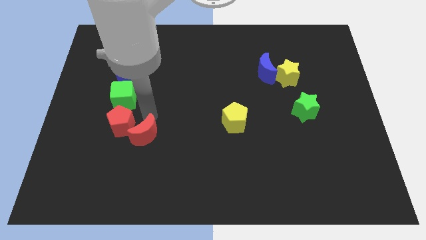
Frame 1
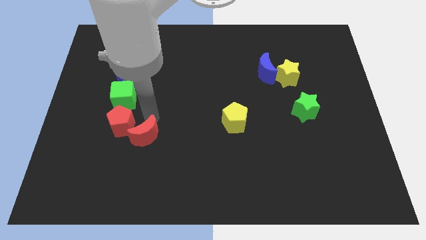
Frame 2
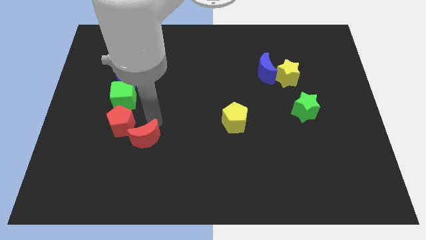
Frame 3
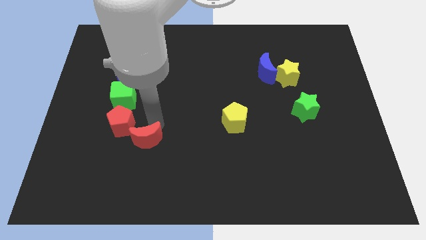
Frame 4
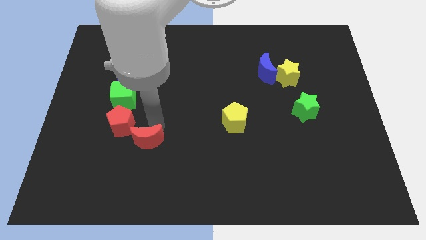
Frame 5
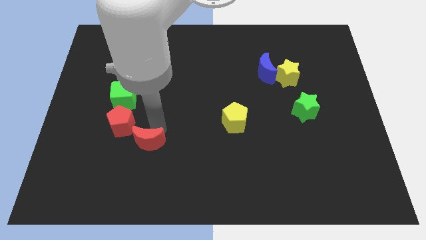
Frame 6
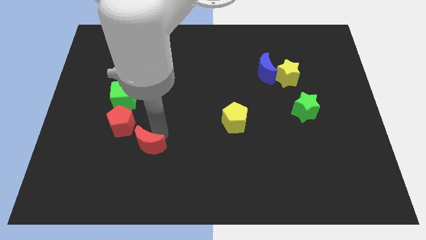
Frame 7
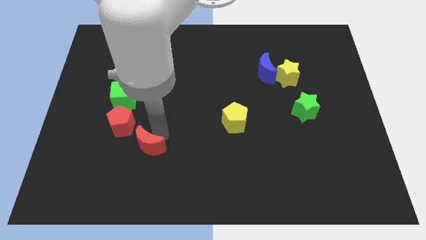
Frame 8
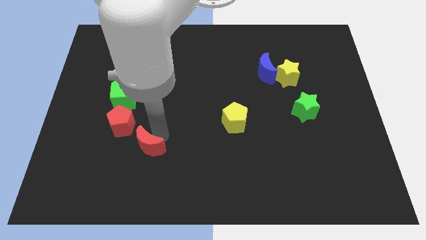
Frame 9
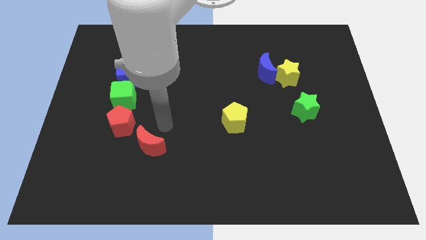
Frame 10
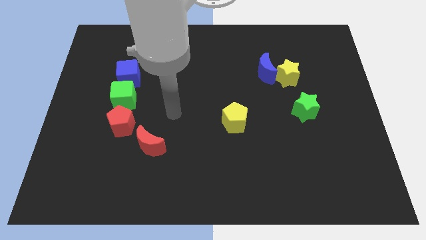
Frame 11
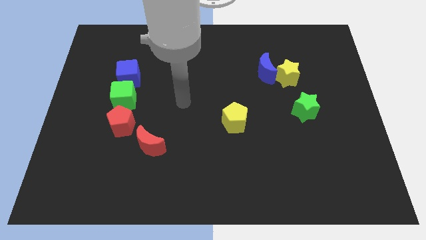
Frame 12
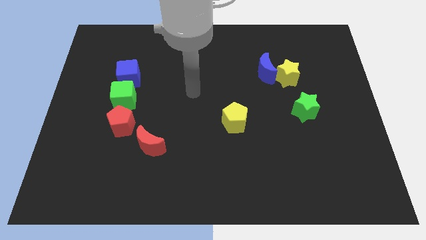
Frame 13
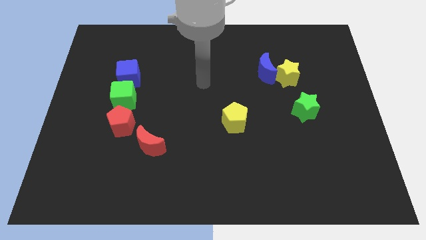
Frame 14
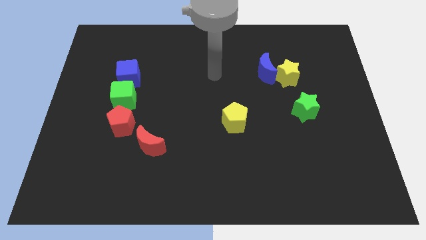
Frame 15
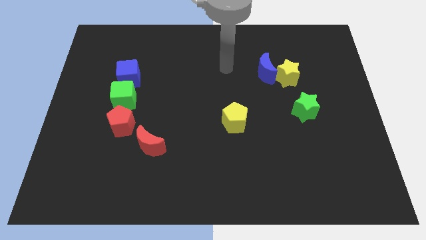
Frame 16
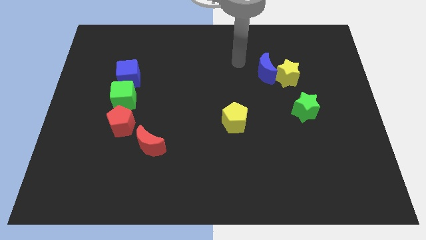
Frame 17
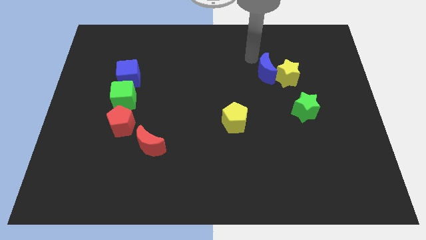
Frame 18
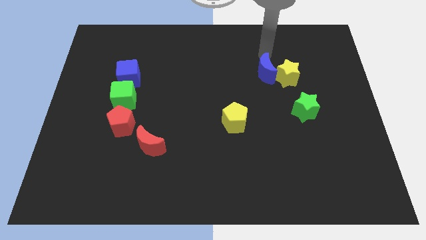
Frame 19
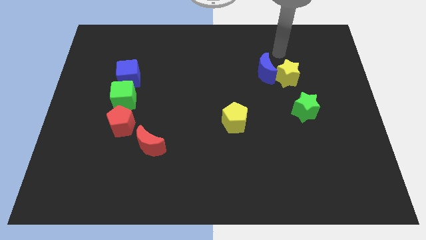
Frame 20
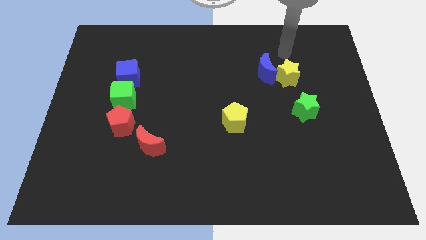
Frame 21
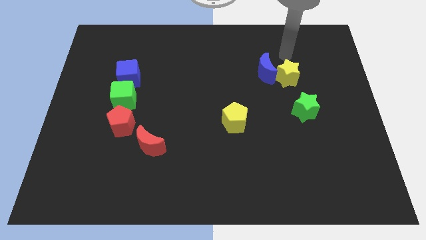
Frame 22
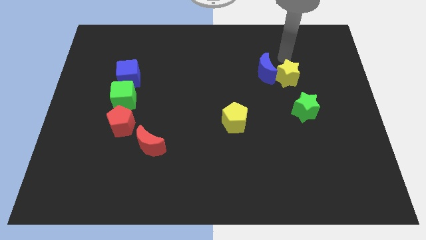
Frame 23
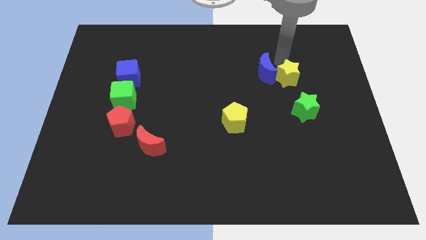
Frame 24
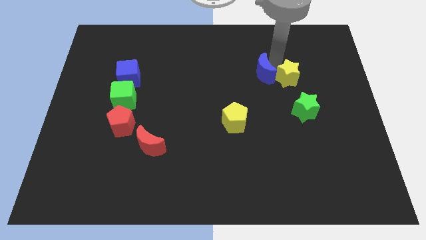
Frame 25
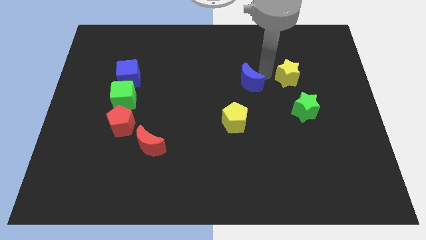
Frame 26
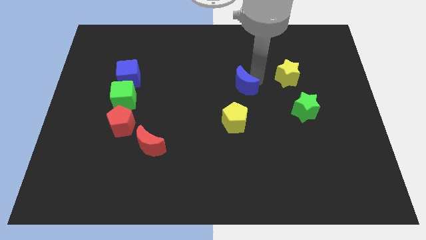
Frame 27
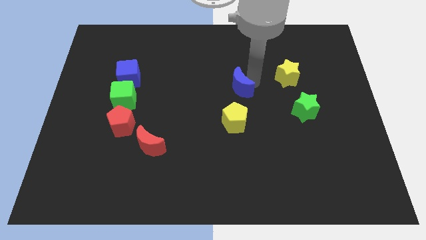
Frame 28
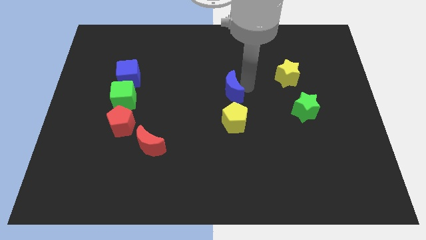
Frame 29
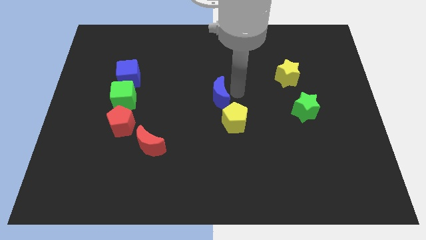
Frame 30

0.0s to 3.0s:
place the blue moon above the yellow pentagon

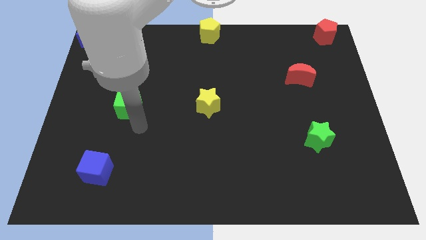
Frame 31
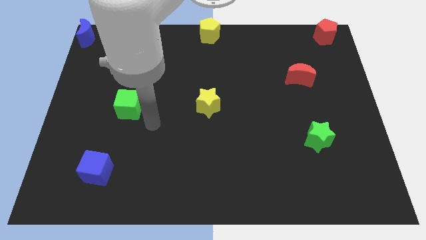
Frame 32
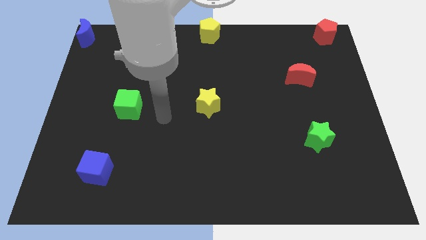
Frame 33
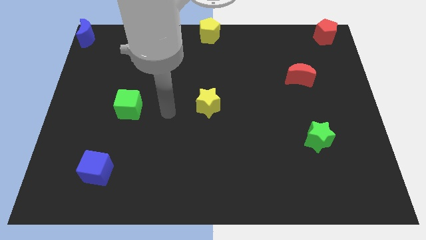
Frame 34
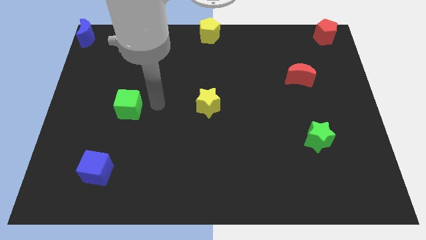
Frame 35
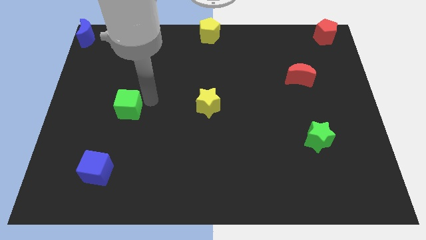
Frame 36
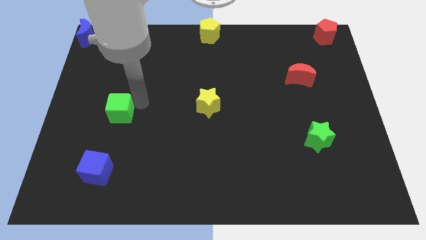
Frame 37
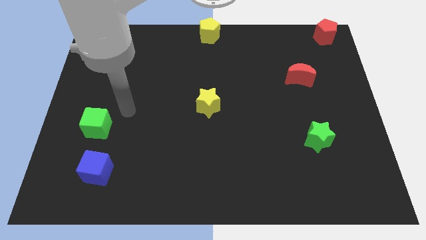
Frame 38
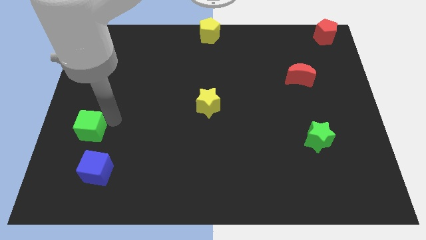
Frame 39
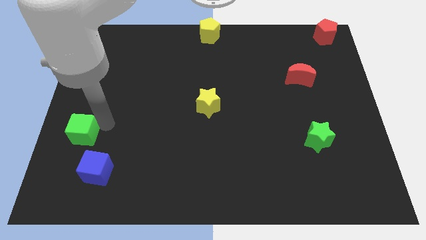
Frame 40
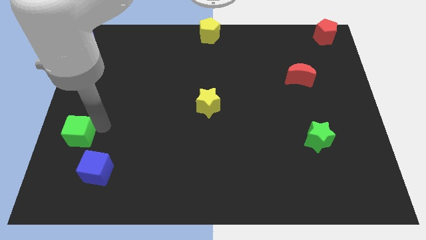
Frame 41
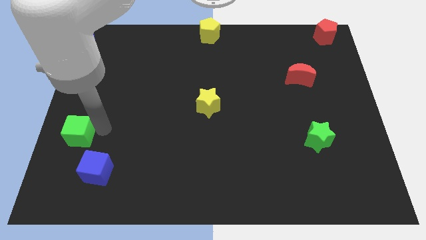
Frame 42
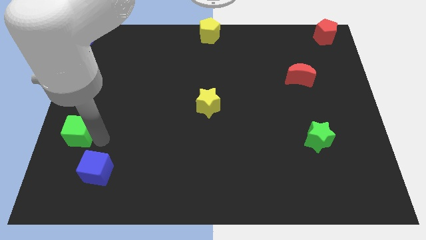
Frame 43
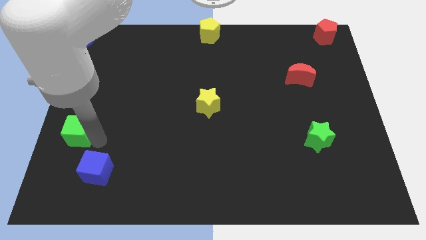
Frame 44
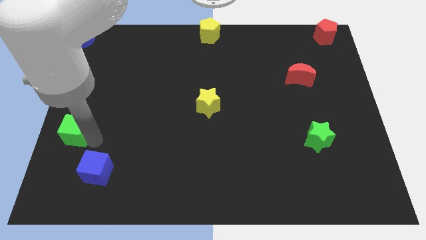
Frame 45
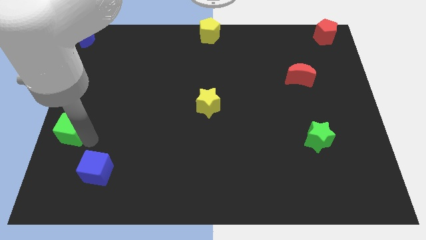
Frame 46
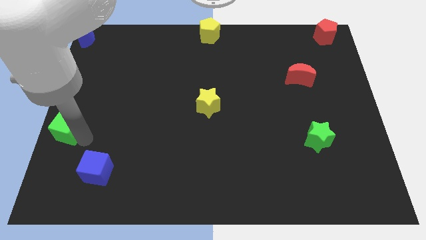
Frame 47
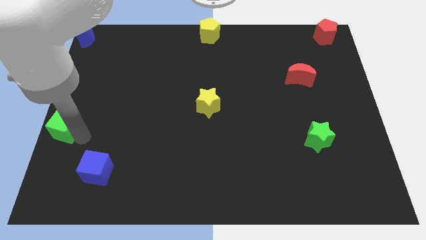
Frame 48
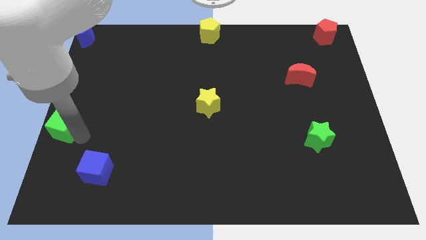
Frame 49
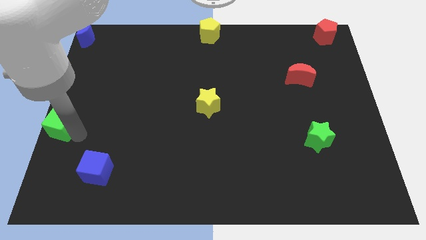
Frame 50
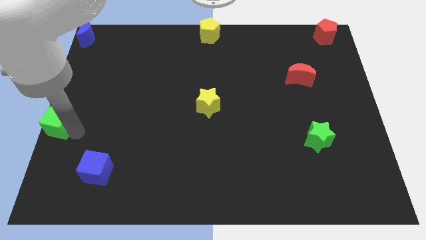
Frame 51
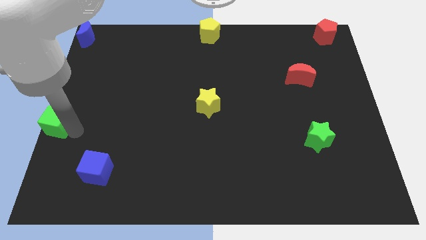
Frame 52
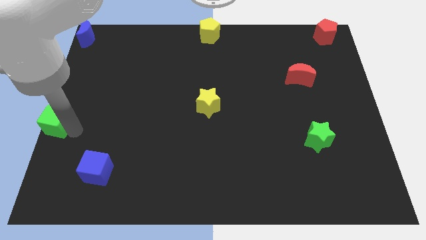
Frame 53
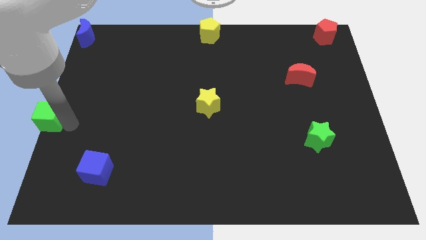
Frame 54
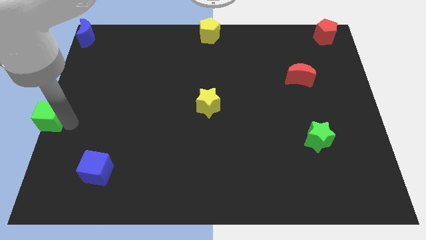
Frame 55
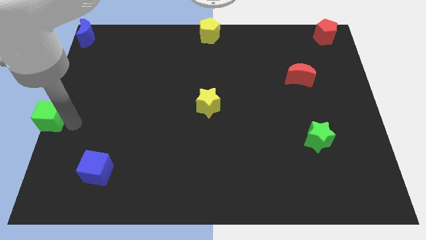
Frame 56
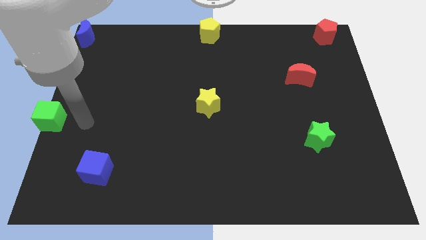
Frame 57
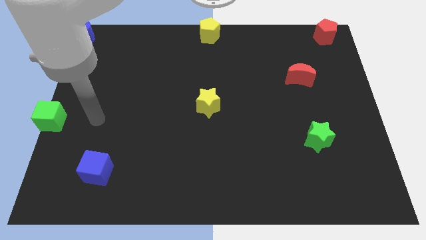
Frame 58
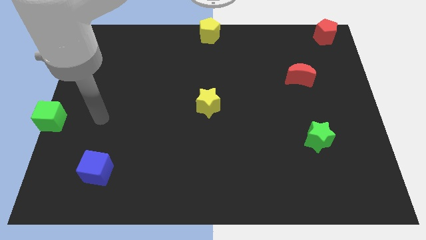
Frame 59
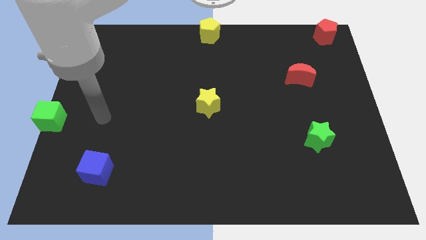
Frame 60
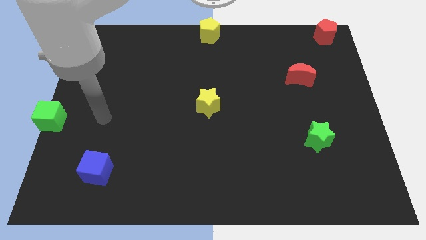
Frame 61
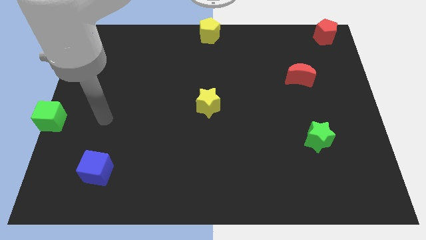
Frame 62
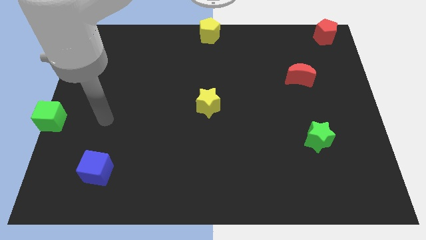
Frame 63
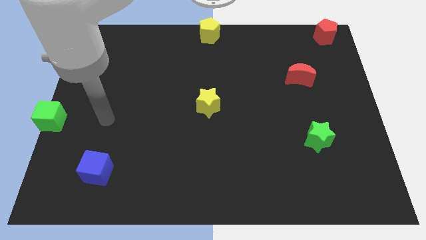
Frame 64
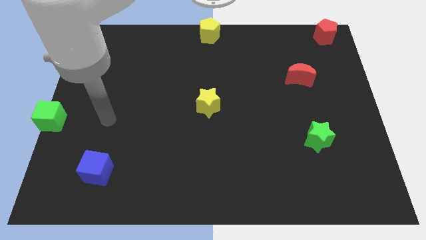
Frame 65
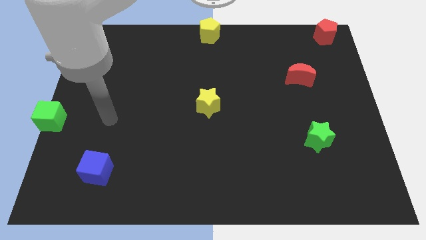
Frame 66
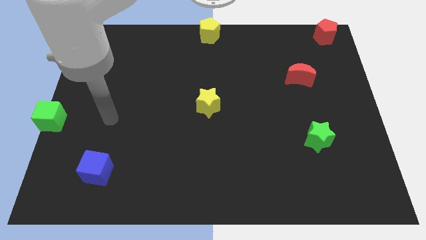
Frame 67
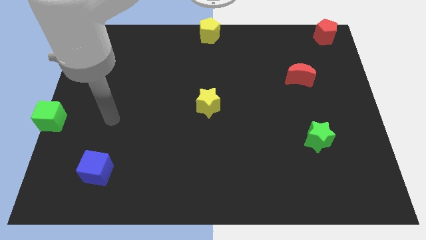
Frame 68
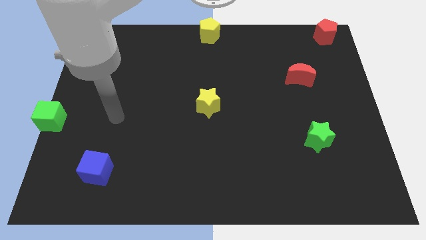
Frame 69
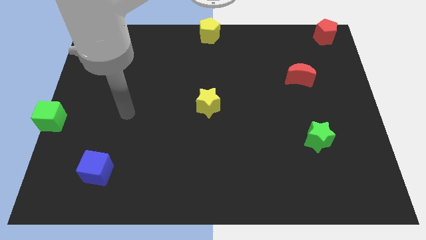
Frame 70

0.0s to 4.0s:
move the green cube to the left center of the board

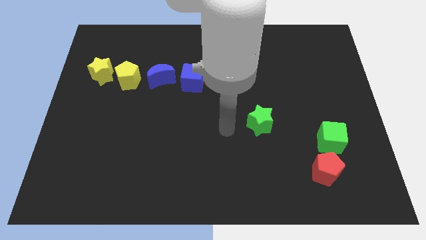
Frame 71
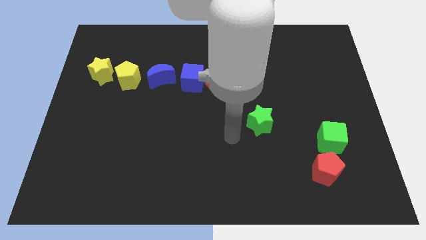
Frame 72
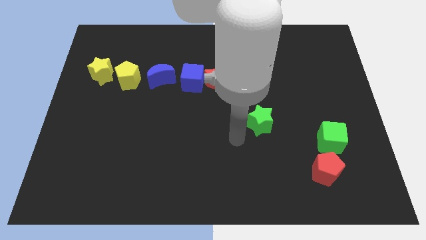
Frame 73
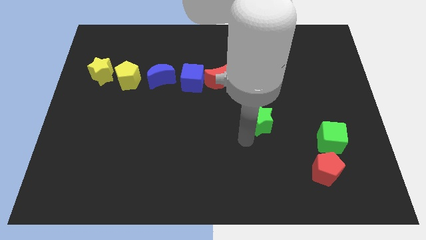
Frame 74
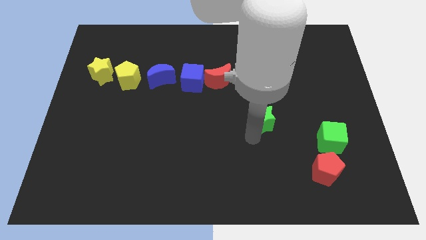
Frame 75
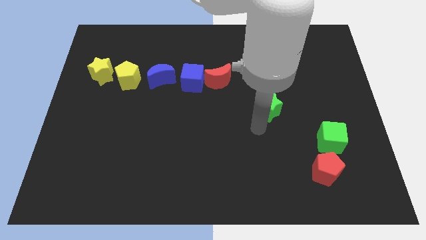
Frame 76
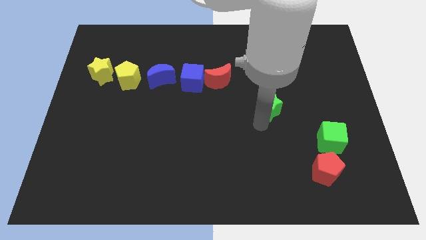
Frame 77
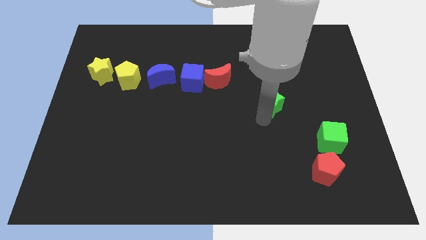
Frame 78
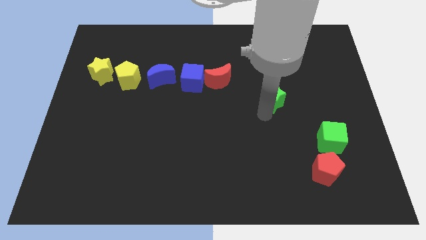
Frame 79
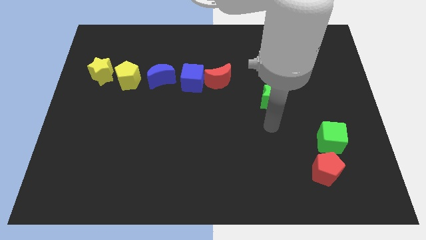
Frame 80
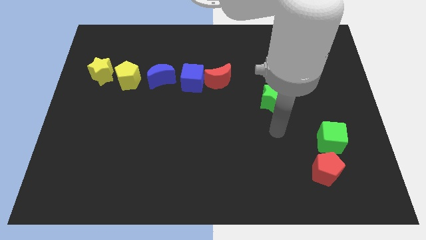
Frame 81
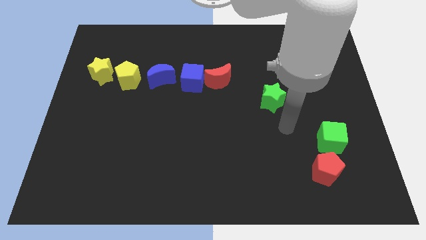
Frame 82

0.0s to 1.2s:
move the green star diagonally bottom right to red moon

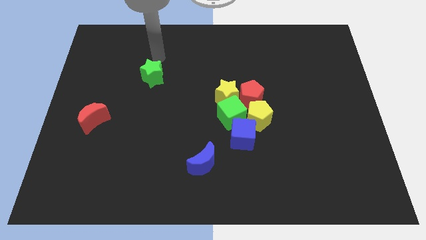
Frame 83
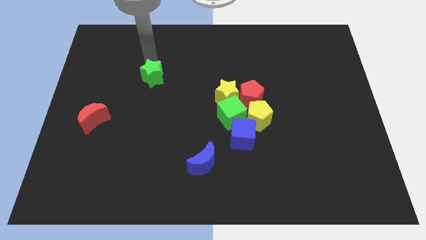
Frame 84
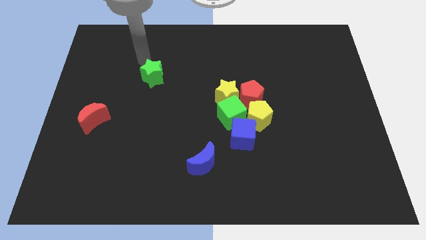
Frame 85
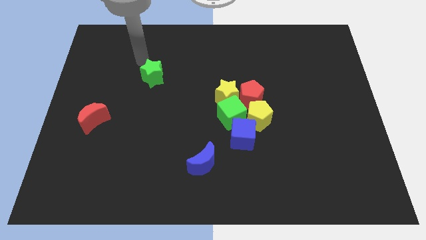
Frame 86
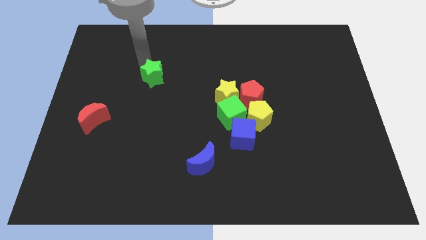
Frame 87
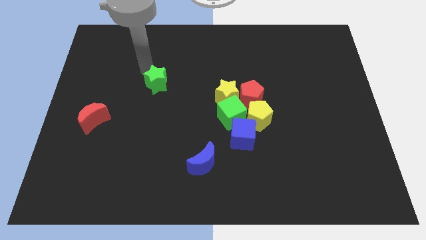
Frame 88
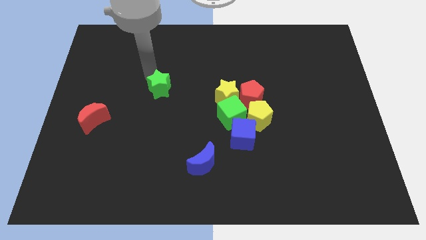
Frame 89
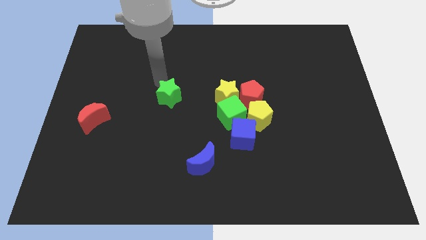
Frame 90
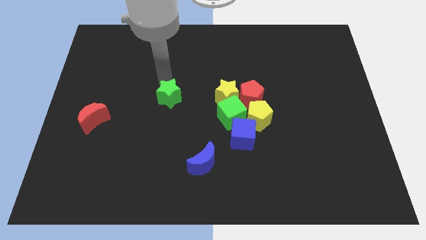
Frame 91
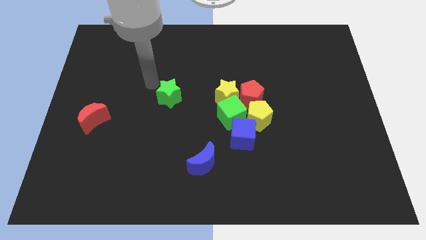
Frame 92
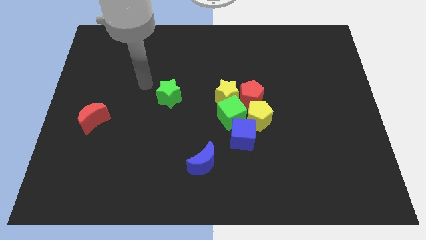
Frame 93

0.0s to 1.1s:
slightly push the green star parallel left to the yellow star
